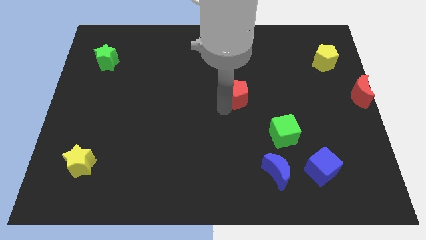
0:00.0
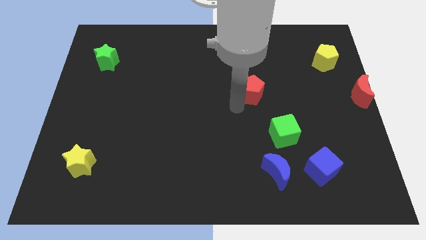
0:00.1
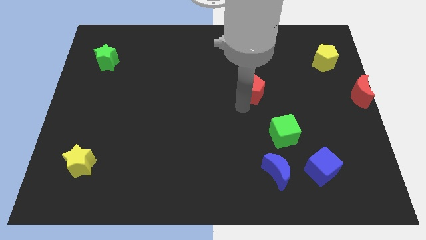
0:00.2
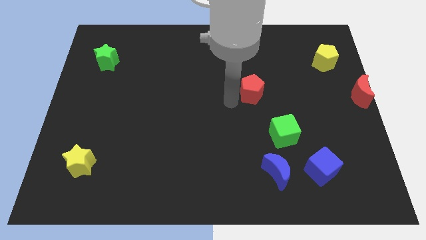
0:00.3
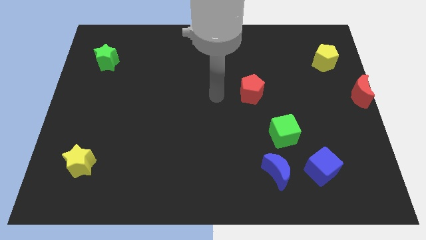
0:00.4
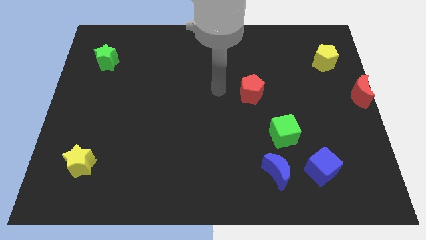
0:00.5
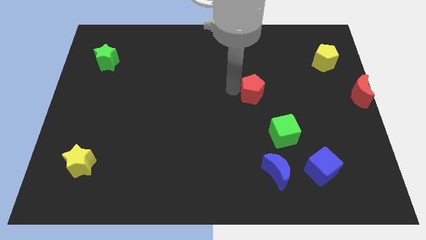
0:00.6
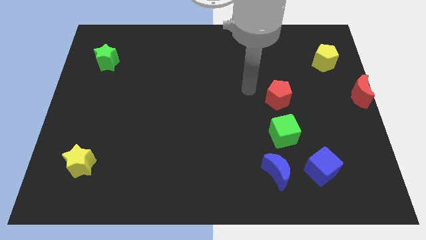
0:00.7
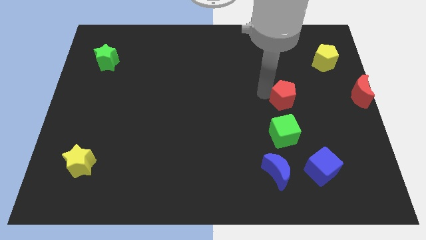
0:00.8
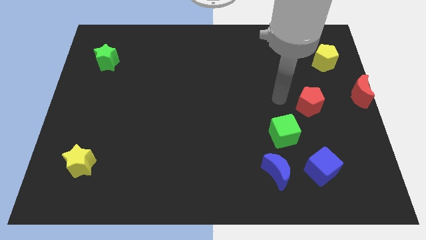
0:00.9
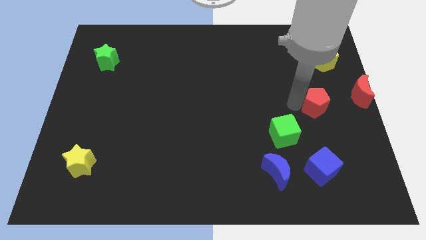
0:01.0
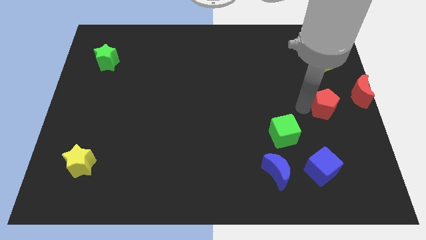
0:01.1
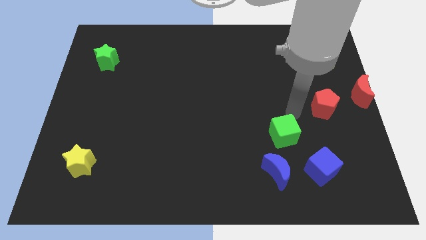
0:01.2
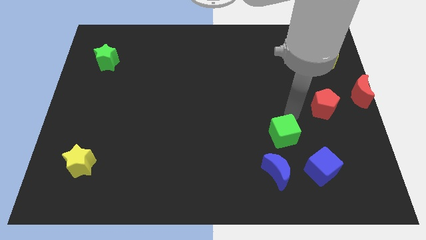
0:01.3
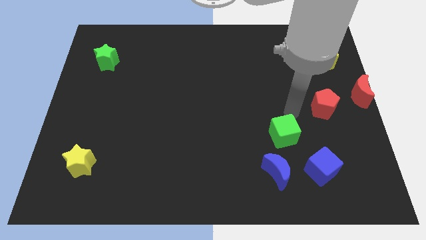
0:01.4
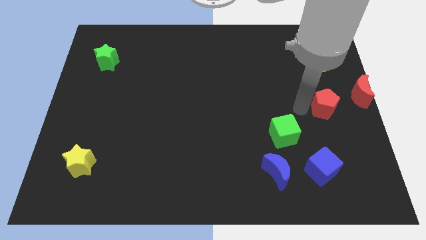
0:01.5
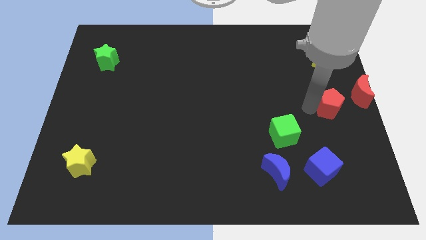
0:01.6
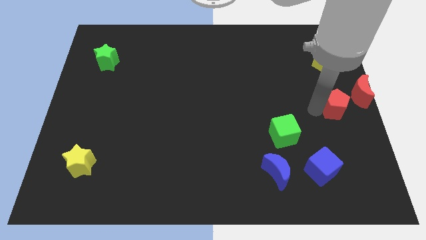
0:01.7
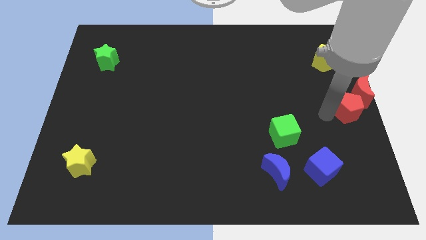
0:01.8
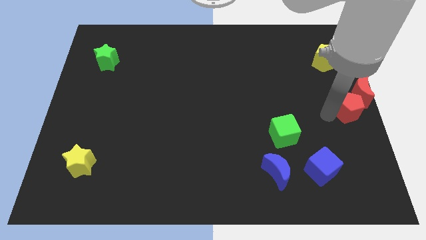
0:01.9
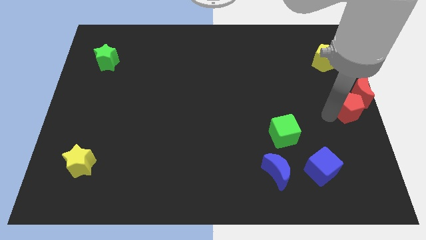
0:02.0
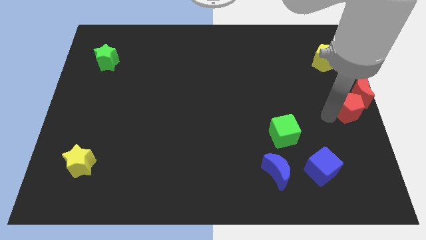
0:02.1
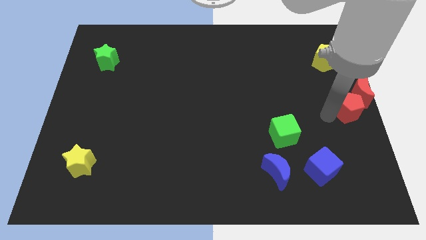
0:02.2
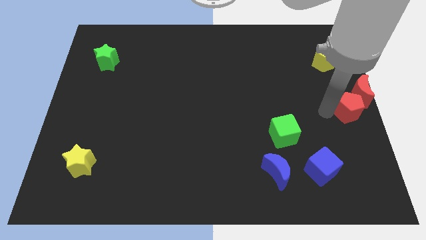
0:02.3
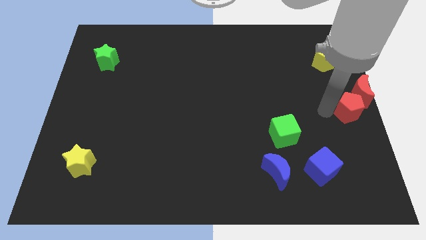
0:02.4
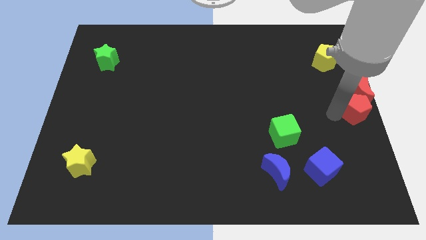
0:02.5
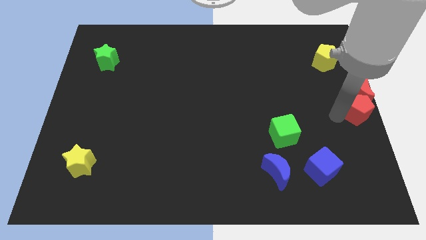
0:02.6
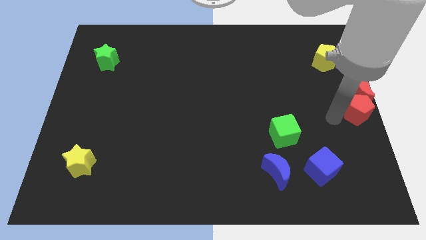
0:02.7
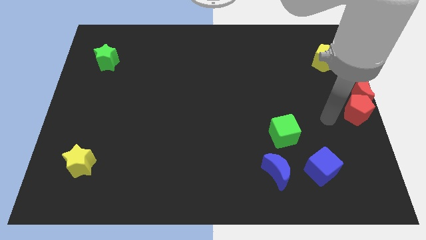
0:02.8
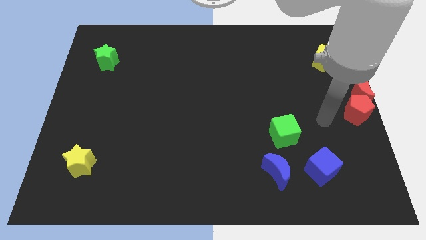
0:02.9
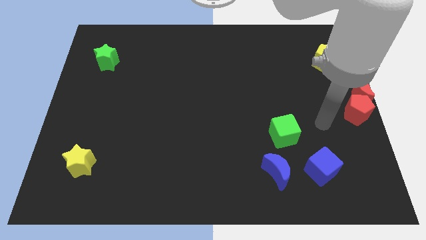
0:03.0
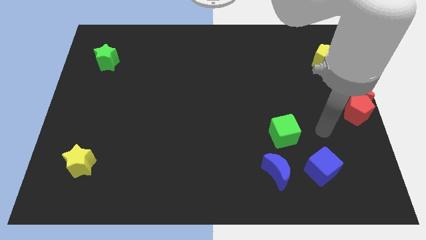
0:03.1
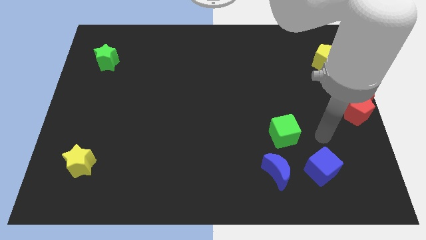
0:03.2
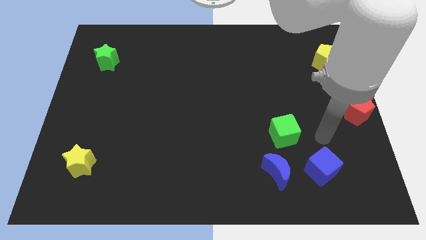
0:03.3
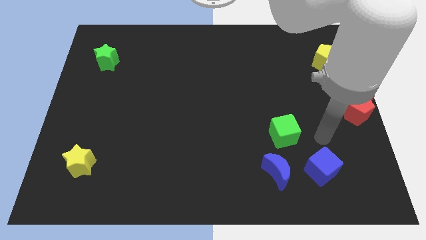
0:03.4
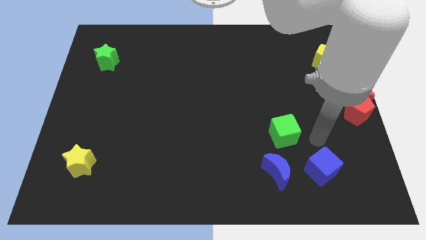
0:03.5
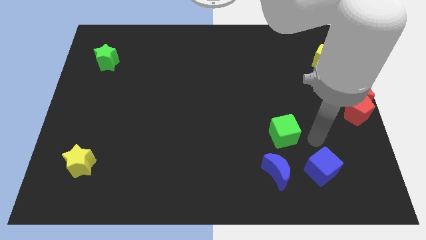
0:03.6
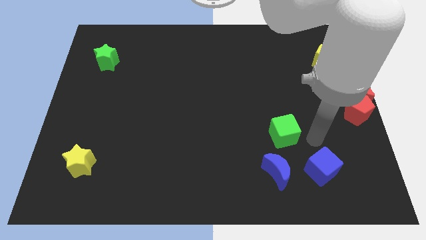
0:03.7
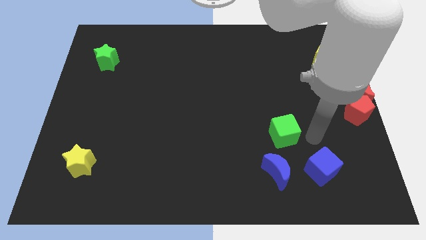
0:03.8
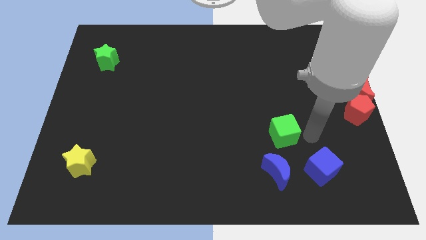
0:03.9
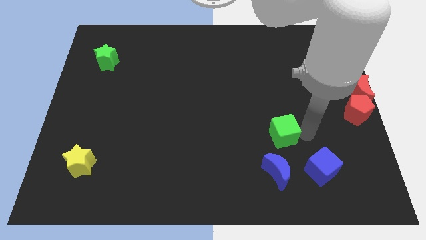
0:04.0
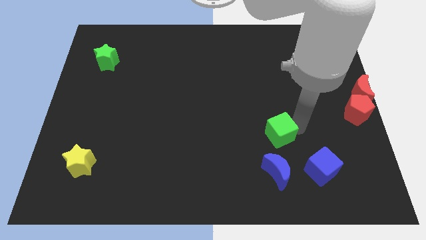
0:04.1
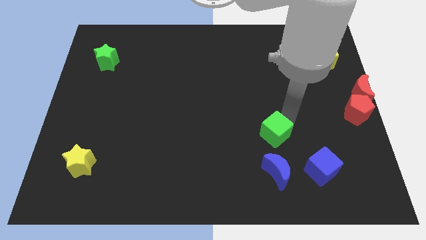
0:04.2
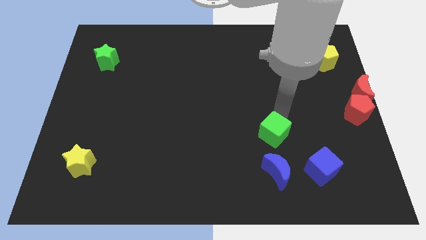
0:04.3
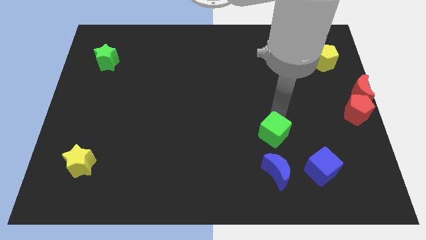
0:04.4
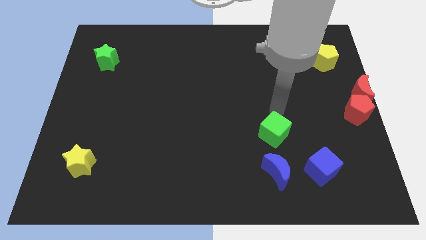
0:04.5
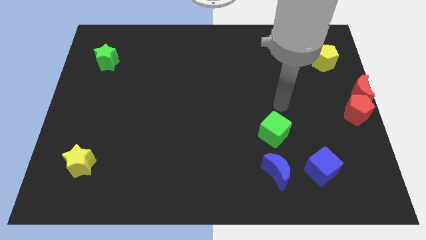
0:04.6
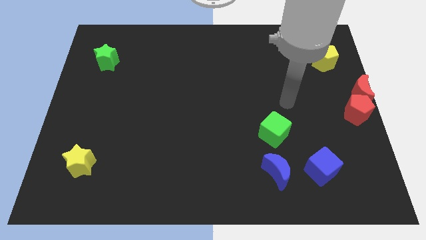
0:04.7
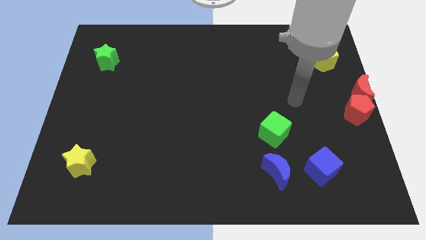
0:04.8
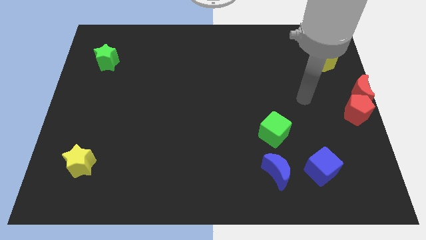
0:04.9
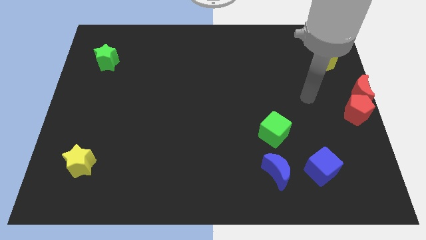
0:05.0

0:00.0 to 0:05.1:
move the red pentagon into the center right

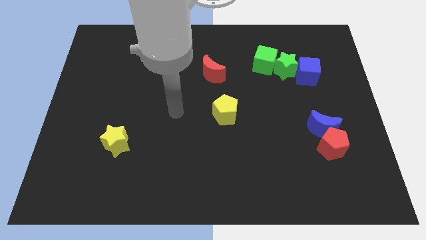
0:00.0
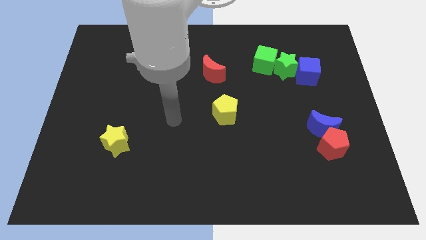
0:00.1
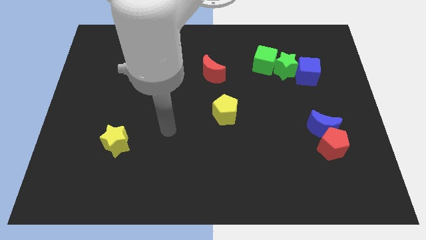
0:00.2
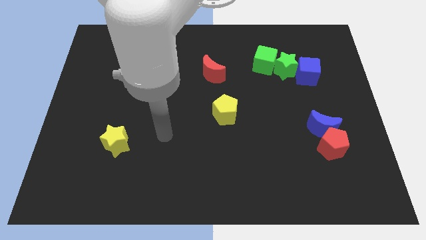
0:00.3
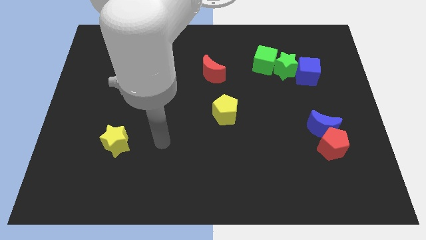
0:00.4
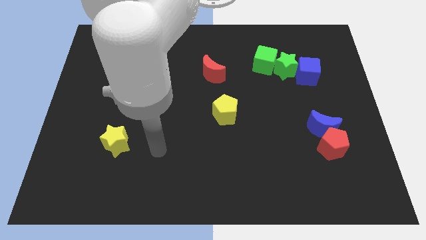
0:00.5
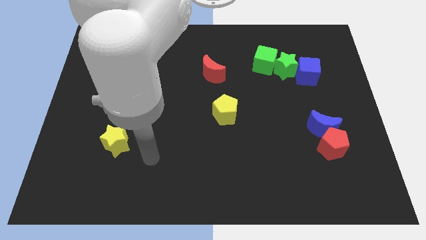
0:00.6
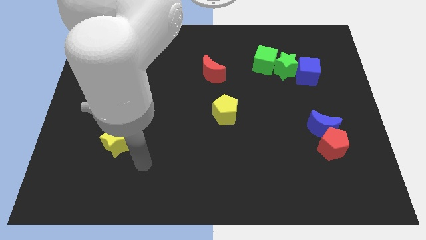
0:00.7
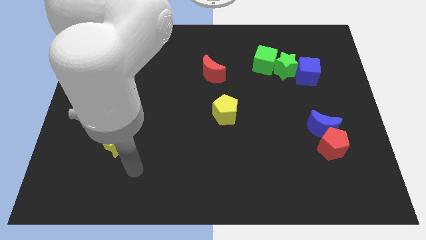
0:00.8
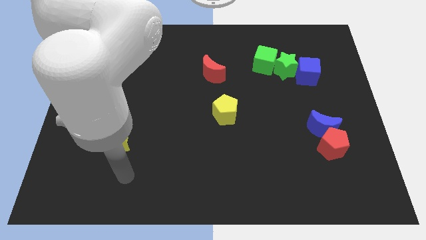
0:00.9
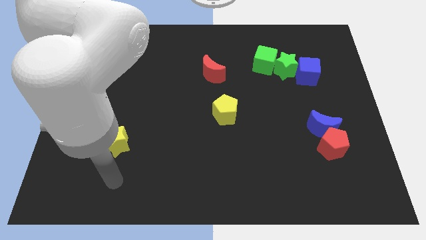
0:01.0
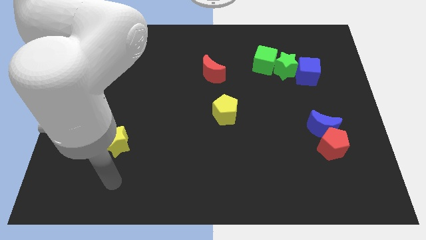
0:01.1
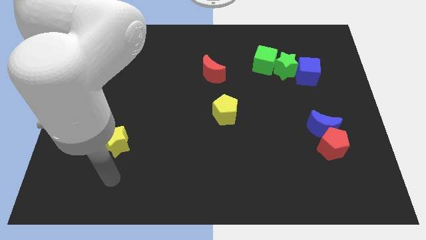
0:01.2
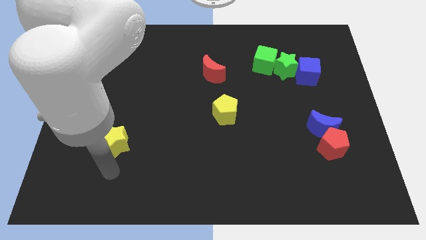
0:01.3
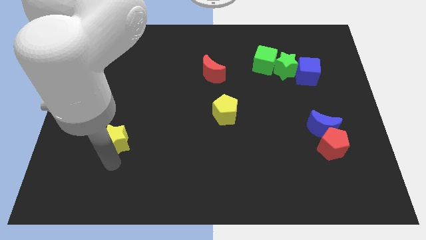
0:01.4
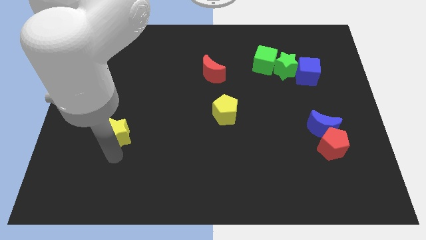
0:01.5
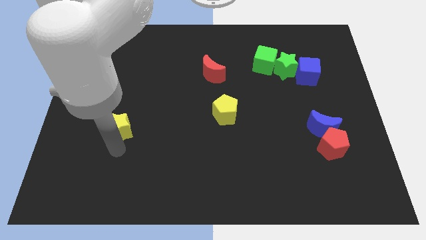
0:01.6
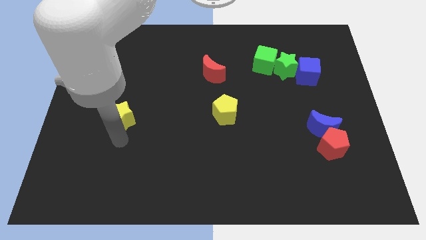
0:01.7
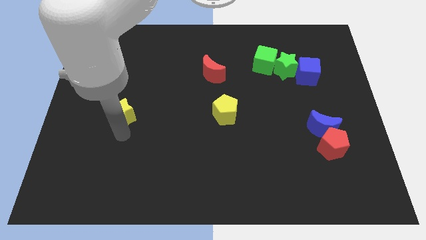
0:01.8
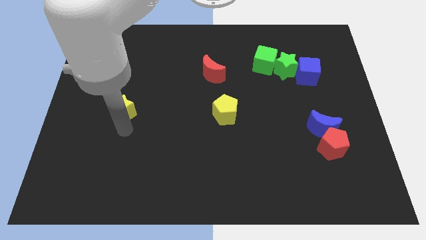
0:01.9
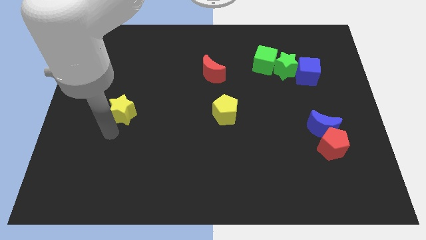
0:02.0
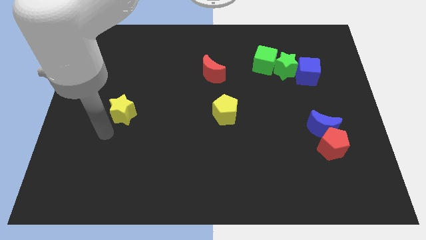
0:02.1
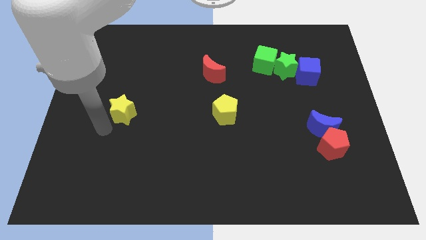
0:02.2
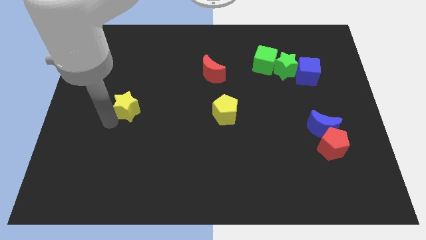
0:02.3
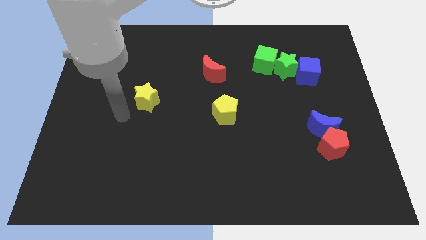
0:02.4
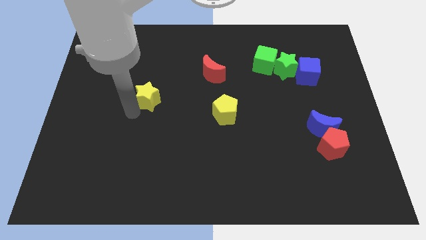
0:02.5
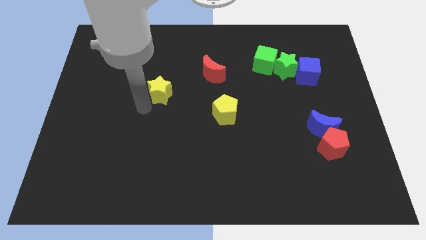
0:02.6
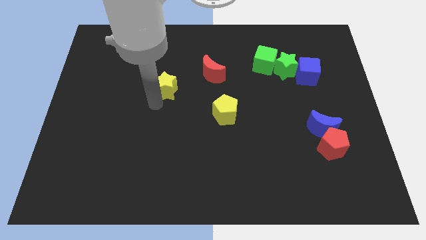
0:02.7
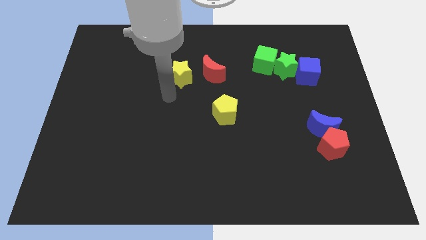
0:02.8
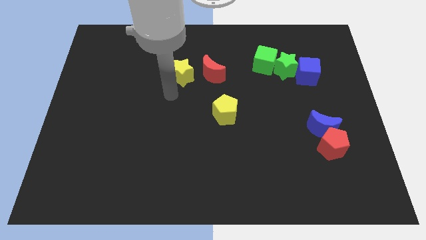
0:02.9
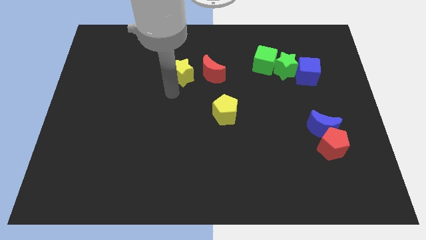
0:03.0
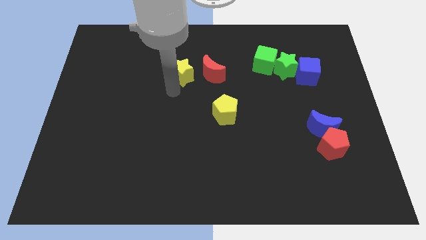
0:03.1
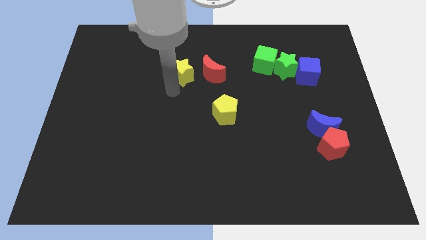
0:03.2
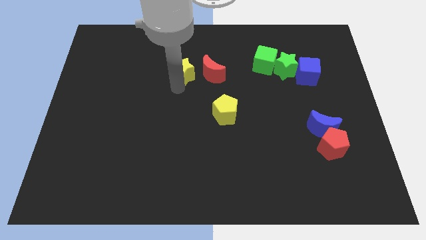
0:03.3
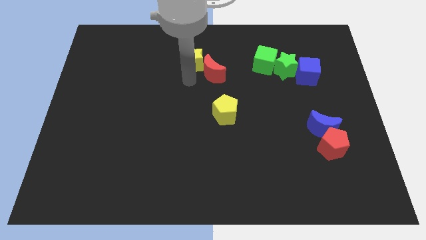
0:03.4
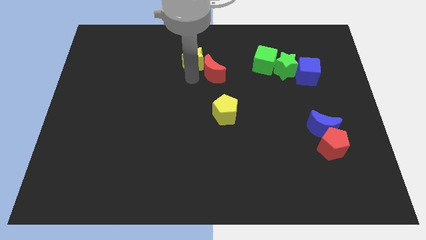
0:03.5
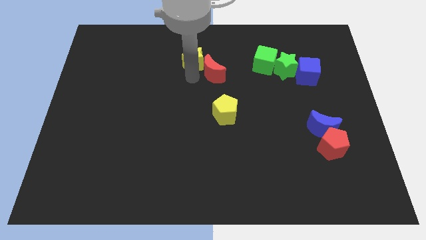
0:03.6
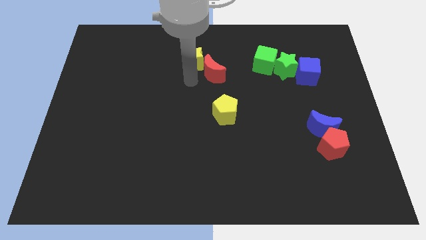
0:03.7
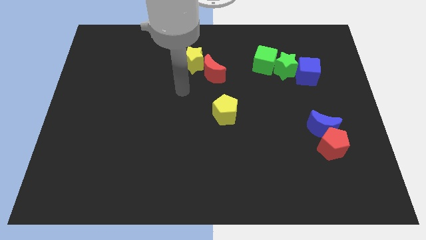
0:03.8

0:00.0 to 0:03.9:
place the yellow star to the top left of the red crescent

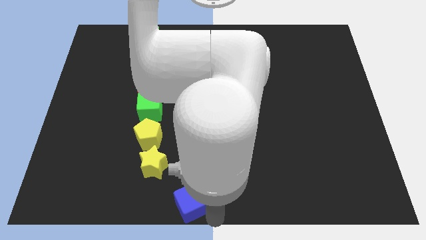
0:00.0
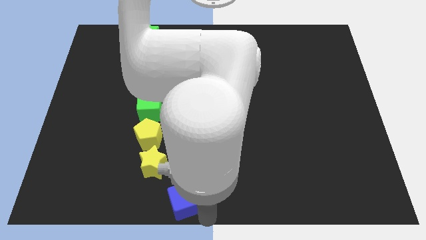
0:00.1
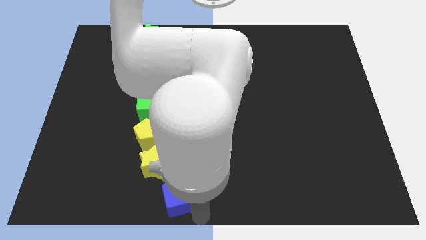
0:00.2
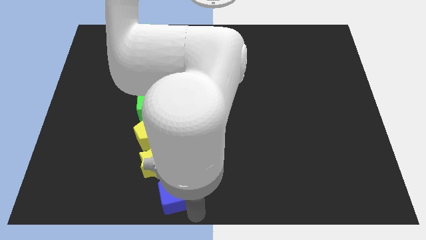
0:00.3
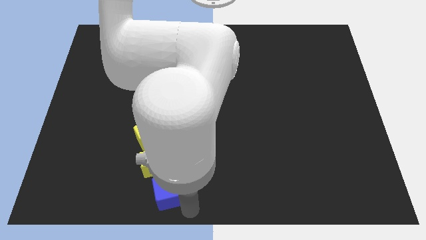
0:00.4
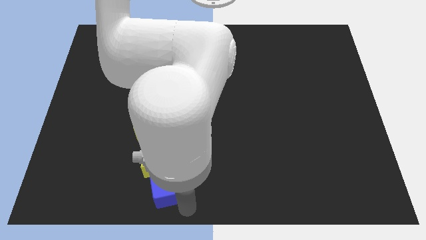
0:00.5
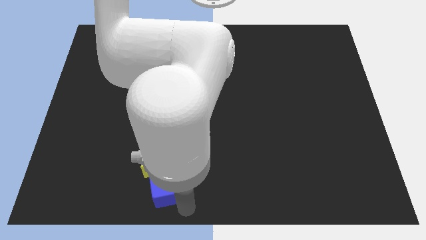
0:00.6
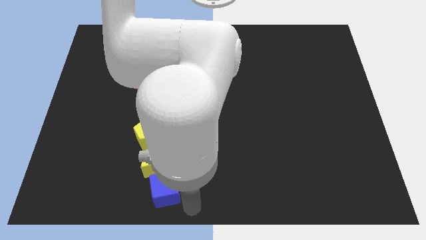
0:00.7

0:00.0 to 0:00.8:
place the blue cube bottom to the yellow star
